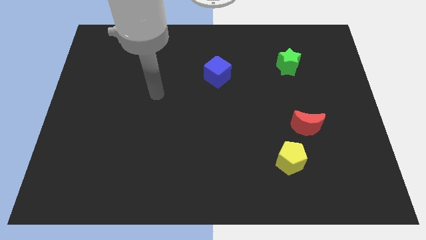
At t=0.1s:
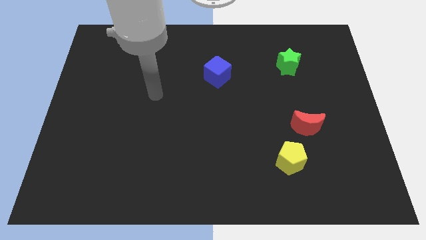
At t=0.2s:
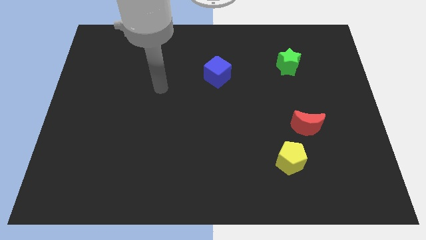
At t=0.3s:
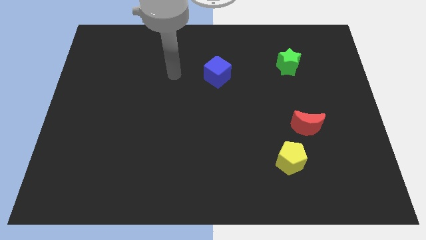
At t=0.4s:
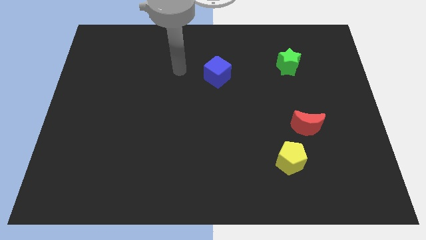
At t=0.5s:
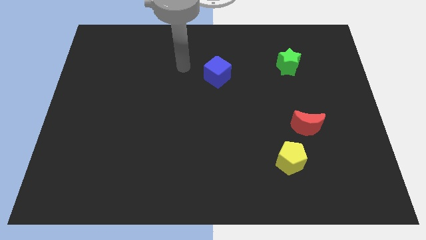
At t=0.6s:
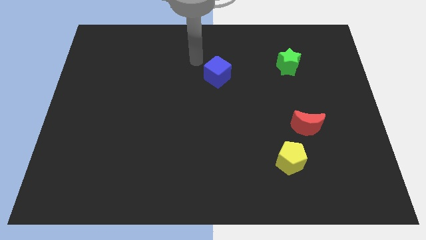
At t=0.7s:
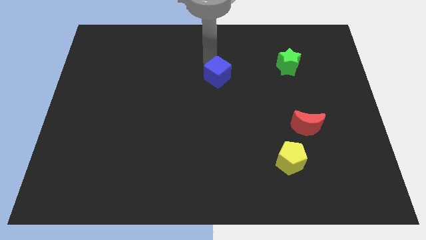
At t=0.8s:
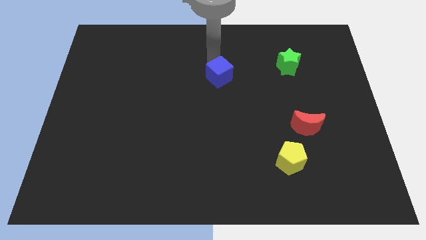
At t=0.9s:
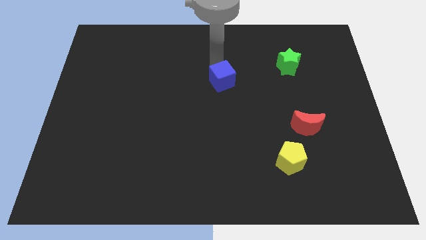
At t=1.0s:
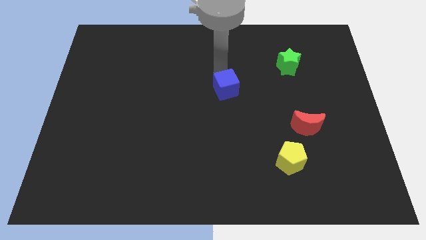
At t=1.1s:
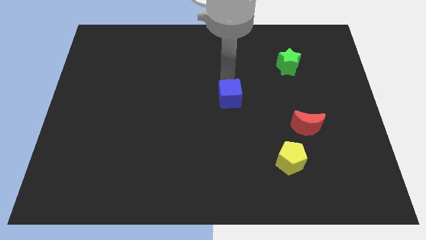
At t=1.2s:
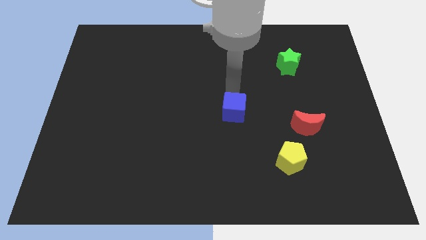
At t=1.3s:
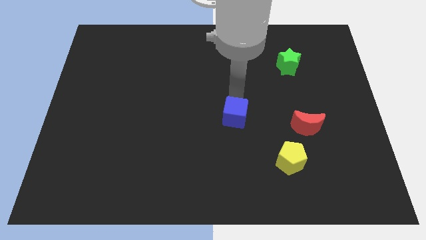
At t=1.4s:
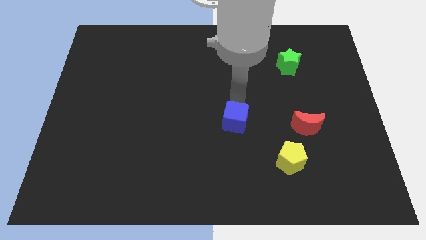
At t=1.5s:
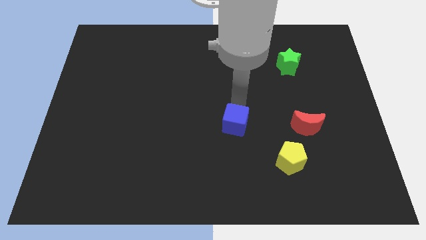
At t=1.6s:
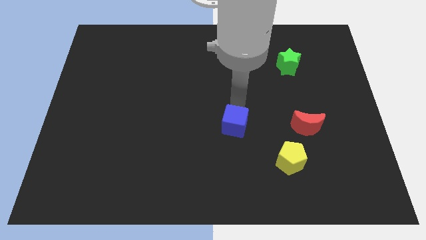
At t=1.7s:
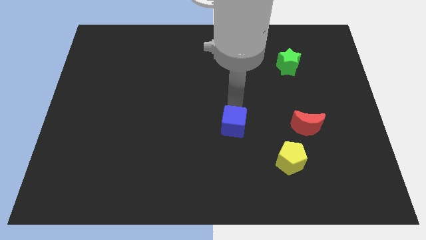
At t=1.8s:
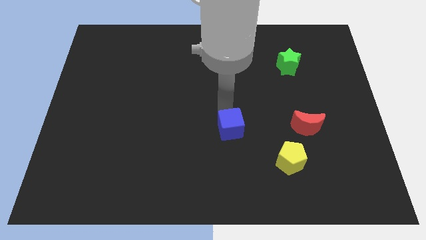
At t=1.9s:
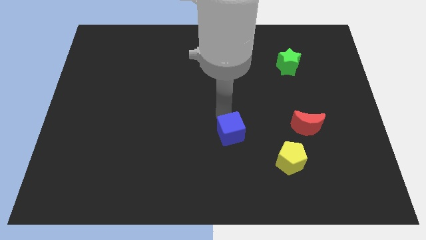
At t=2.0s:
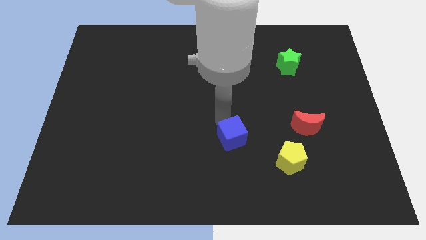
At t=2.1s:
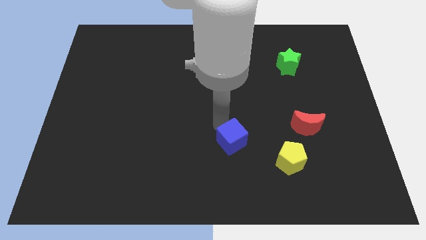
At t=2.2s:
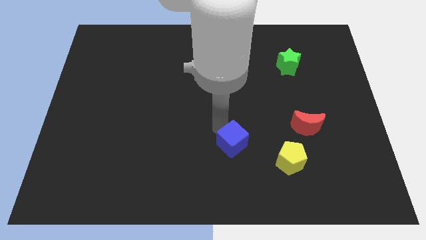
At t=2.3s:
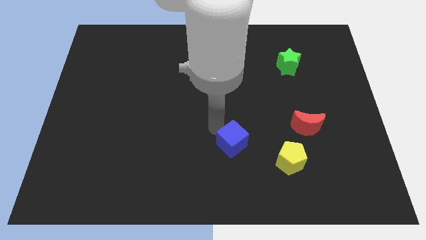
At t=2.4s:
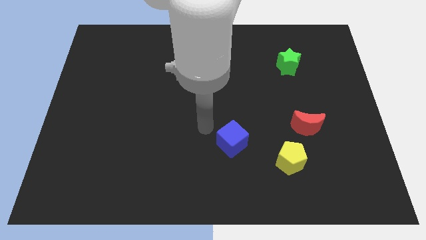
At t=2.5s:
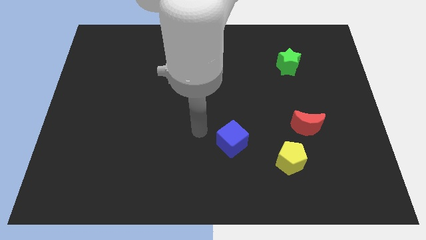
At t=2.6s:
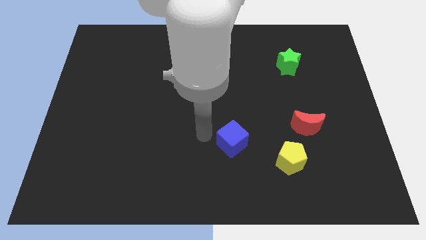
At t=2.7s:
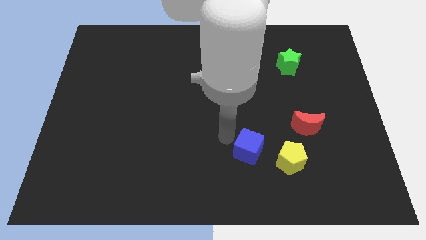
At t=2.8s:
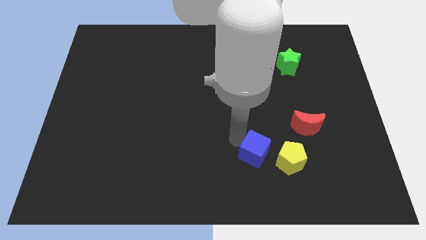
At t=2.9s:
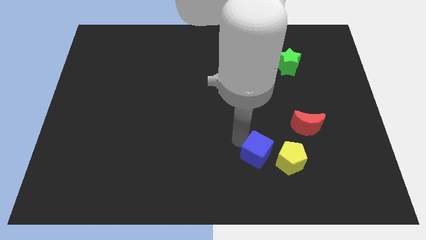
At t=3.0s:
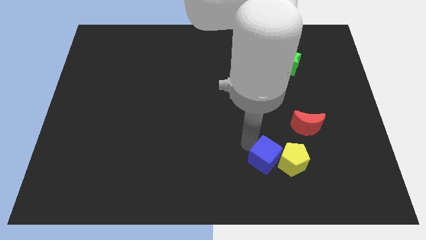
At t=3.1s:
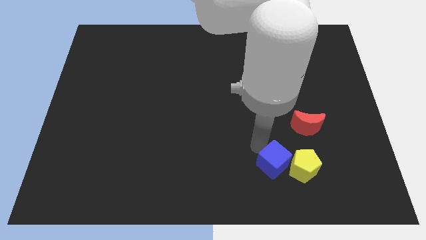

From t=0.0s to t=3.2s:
move the blue block to the pentagon

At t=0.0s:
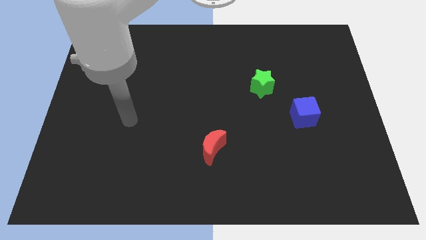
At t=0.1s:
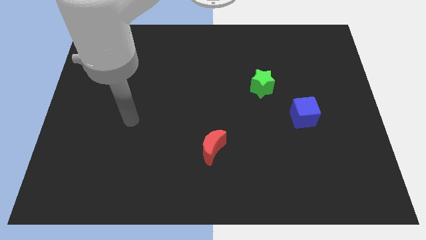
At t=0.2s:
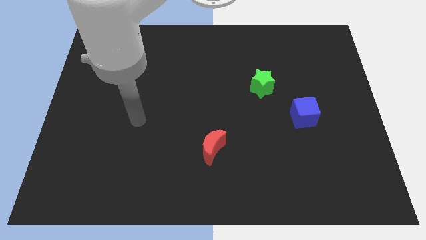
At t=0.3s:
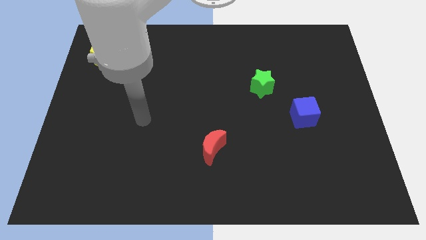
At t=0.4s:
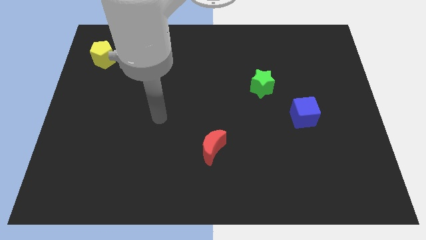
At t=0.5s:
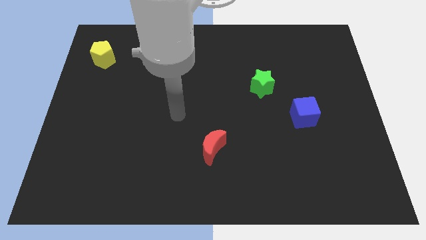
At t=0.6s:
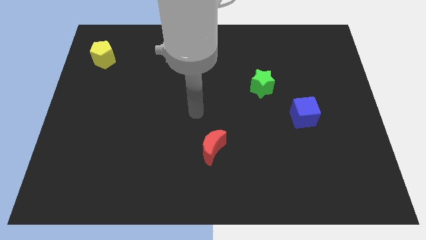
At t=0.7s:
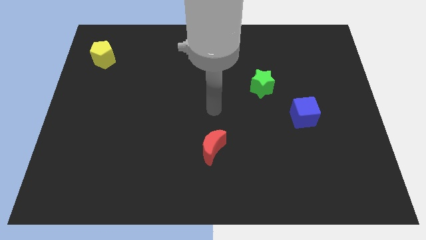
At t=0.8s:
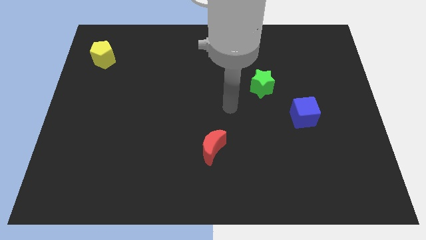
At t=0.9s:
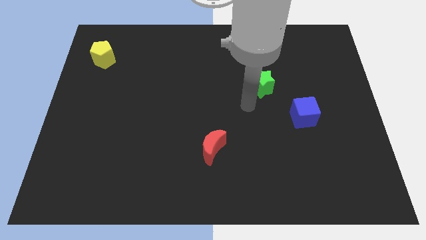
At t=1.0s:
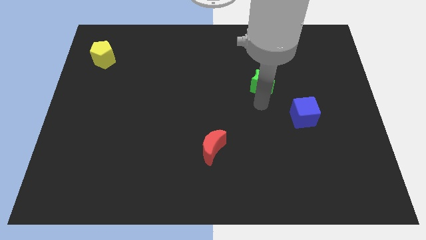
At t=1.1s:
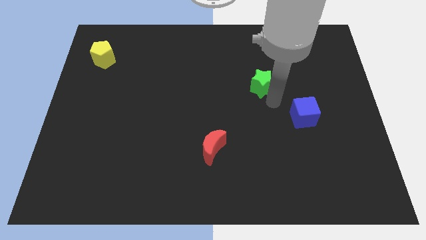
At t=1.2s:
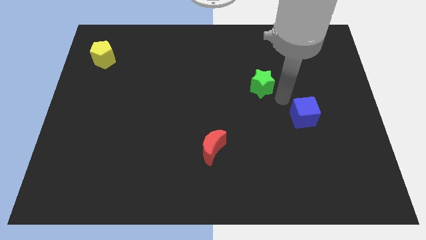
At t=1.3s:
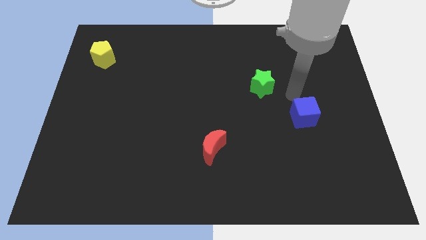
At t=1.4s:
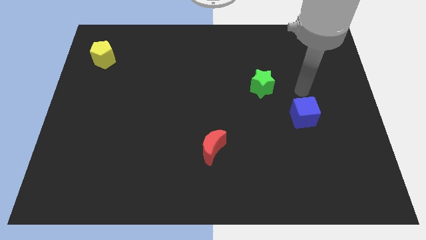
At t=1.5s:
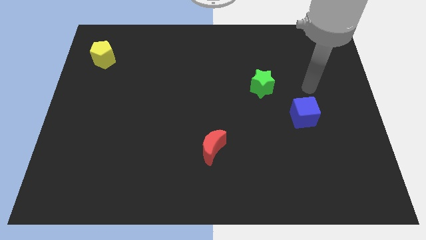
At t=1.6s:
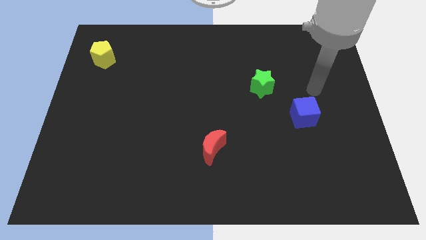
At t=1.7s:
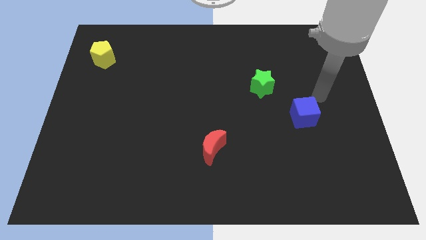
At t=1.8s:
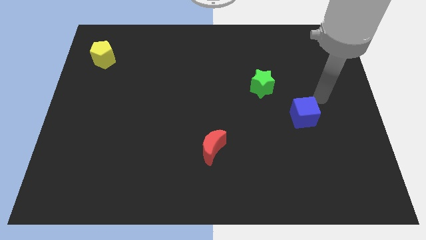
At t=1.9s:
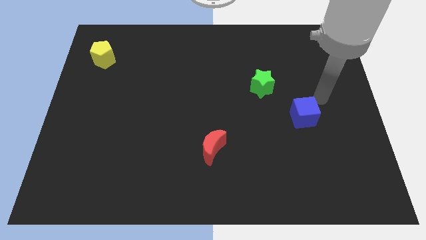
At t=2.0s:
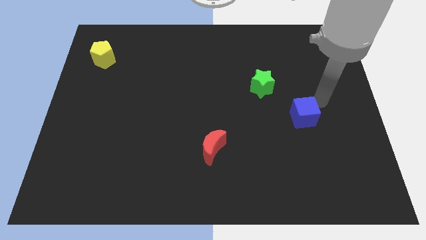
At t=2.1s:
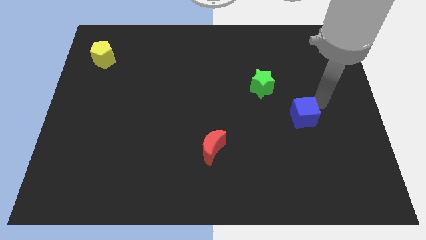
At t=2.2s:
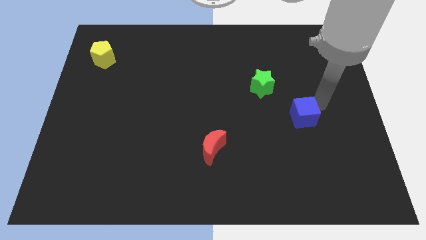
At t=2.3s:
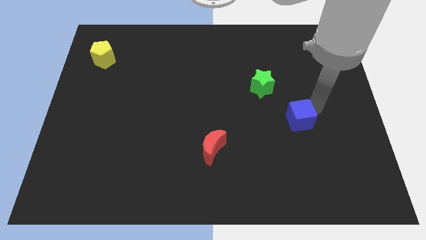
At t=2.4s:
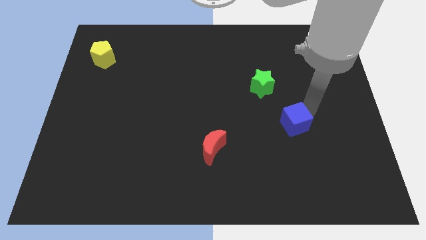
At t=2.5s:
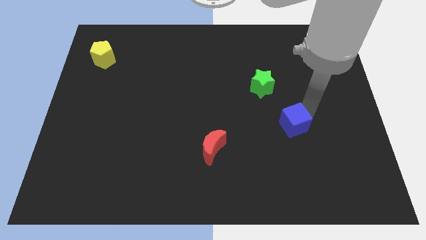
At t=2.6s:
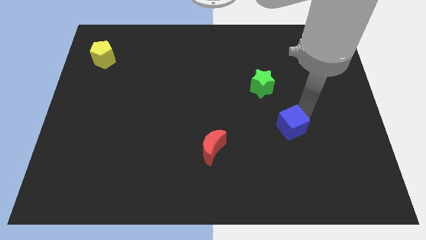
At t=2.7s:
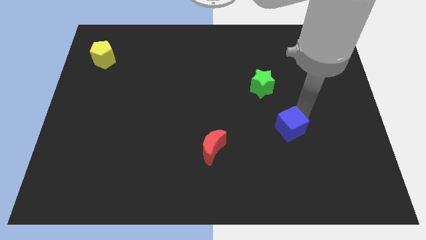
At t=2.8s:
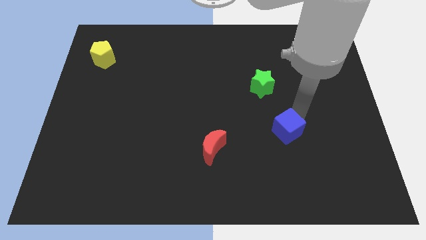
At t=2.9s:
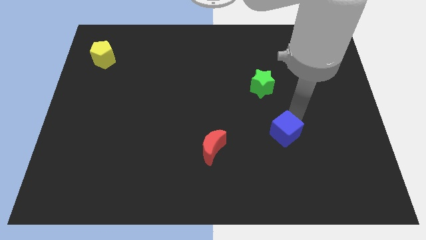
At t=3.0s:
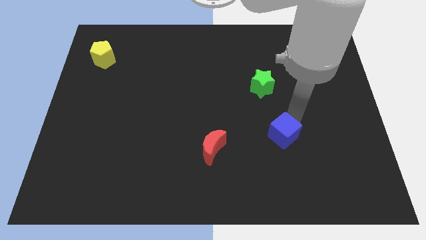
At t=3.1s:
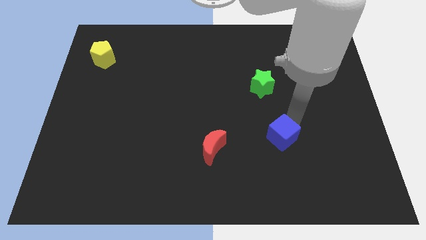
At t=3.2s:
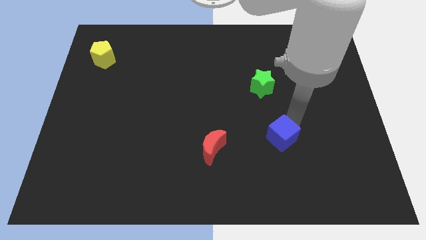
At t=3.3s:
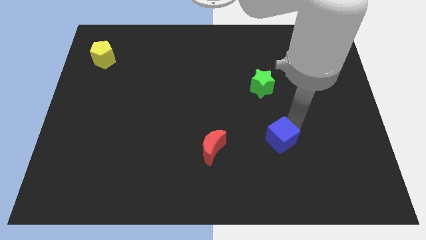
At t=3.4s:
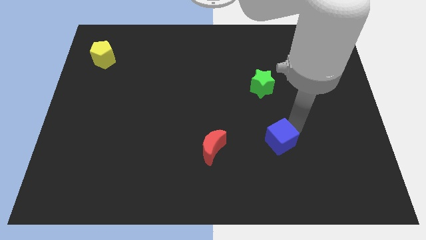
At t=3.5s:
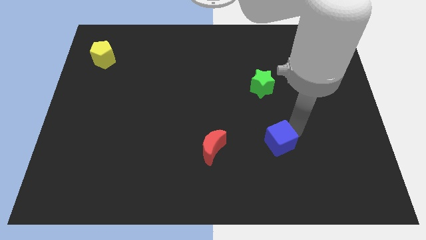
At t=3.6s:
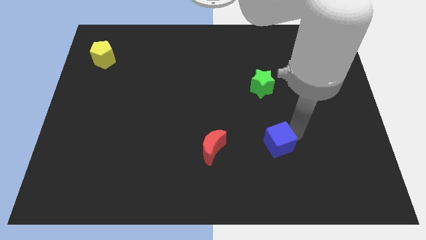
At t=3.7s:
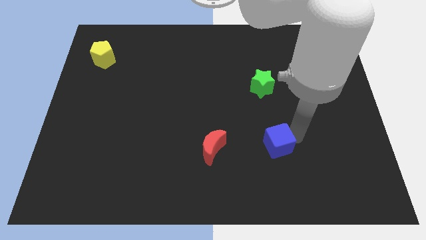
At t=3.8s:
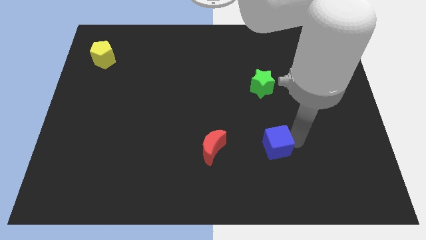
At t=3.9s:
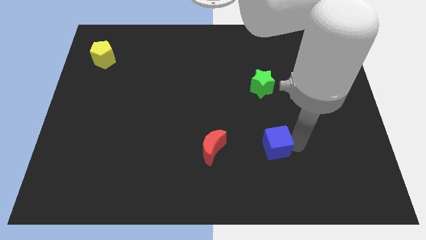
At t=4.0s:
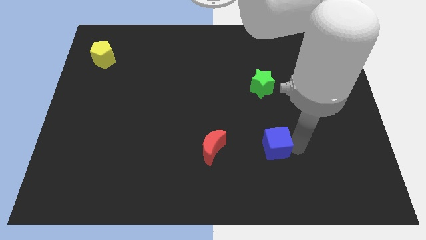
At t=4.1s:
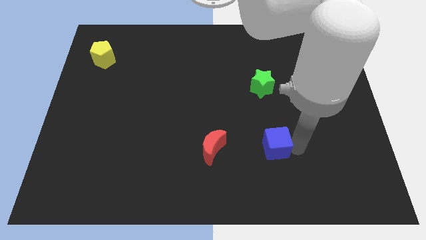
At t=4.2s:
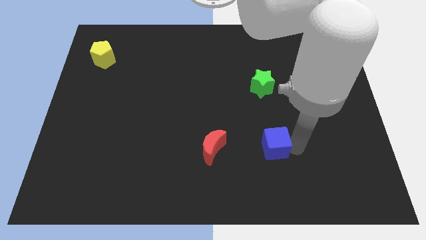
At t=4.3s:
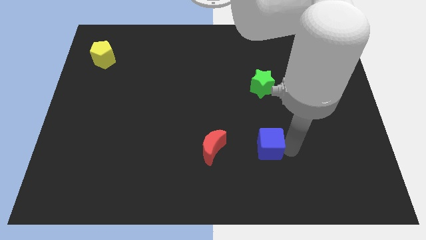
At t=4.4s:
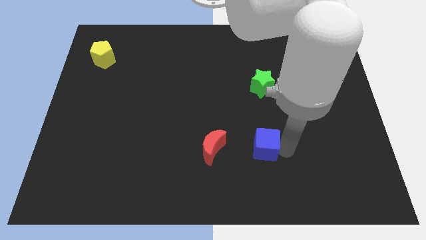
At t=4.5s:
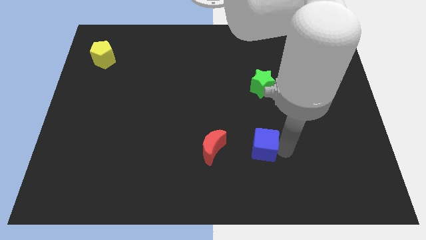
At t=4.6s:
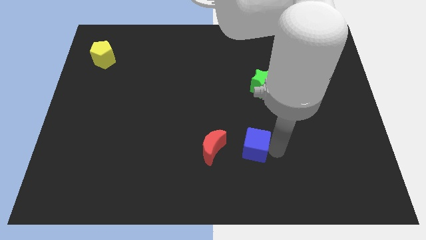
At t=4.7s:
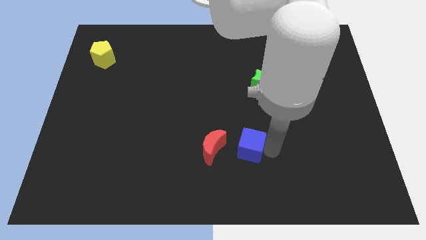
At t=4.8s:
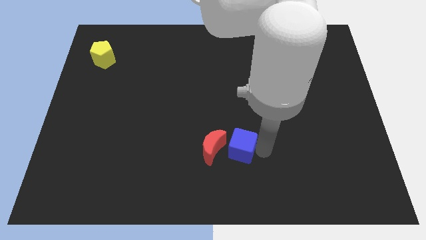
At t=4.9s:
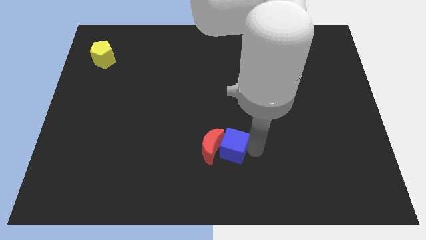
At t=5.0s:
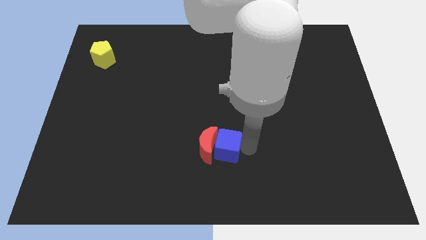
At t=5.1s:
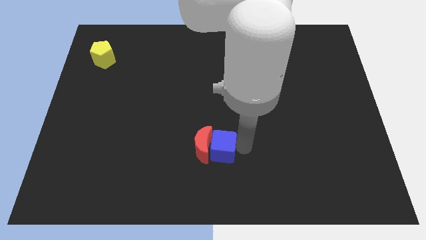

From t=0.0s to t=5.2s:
put the blue block to the red moon
